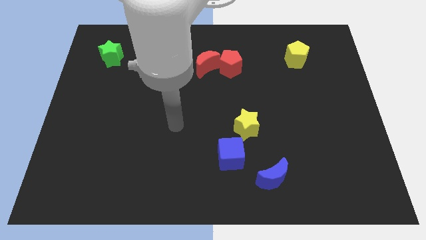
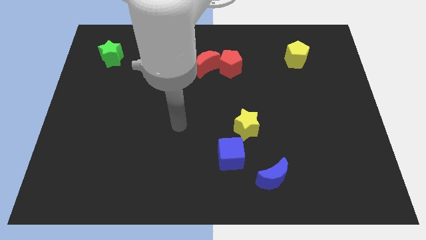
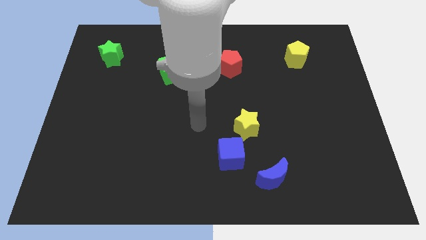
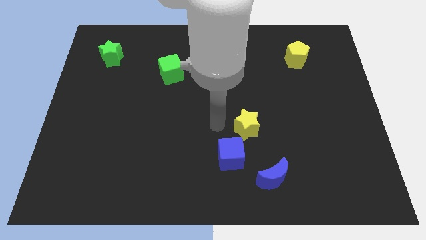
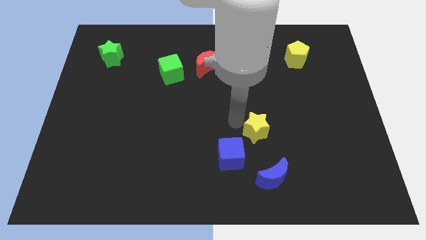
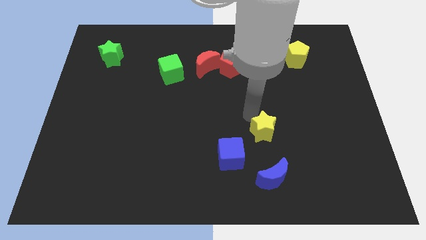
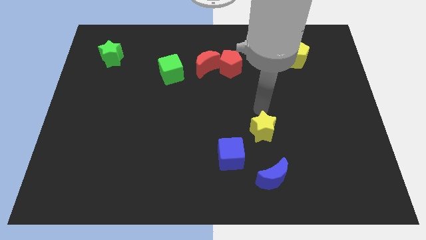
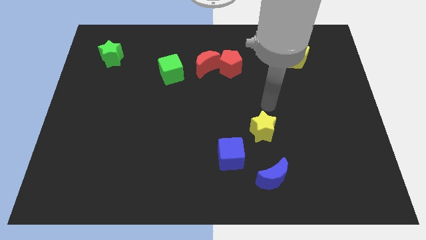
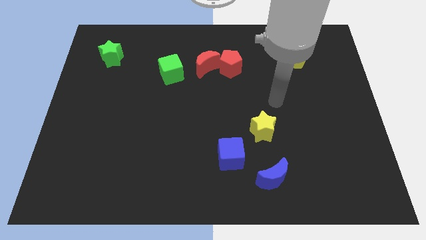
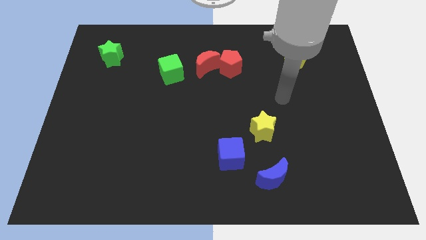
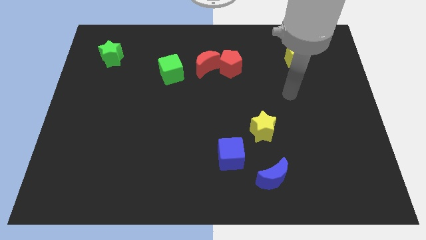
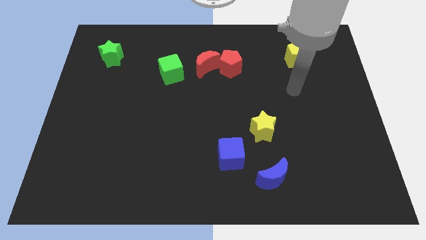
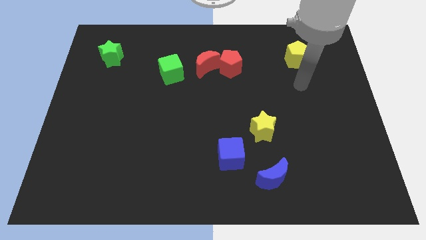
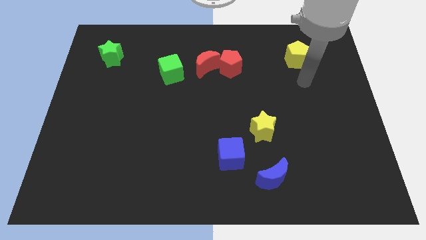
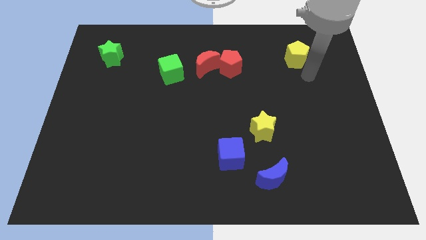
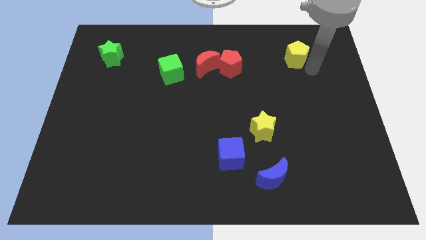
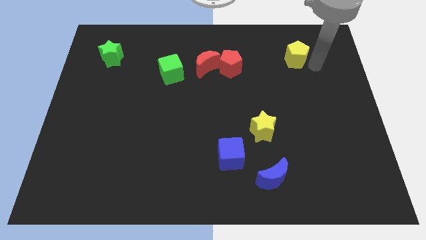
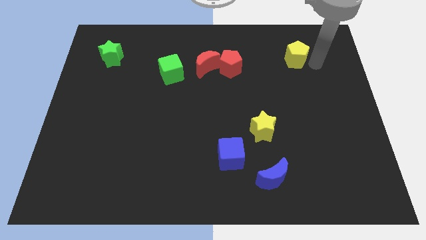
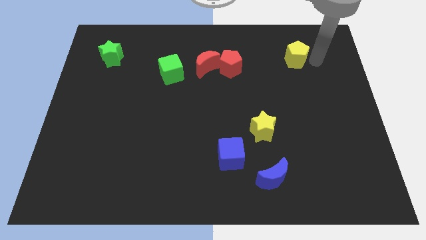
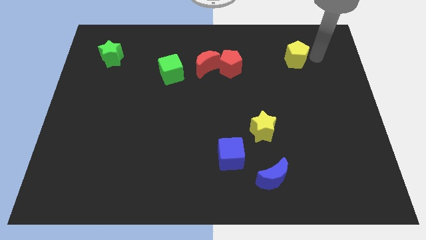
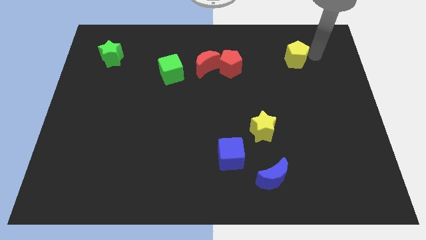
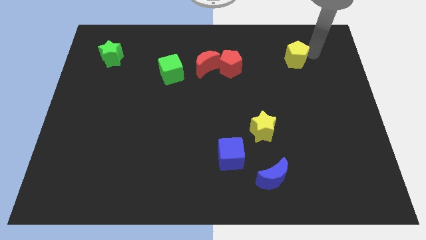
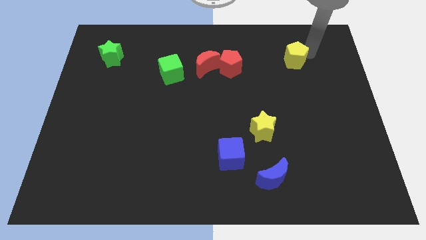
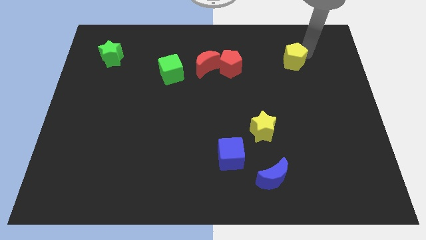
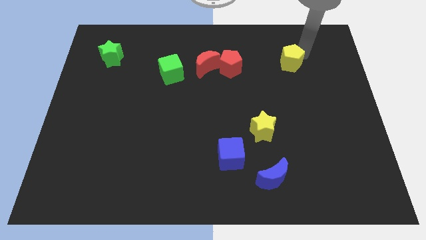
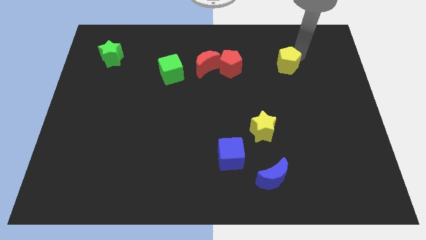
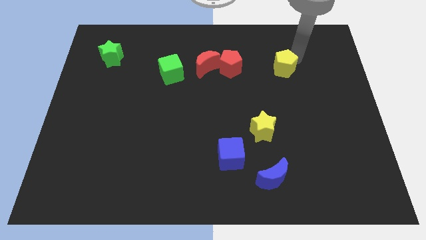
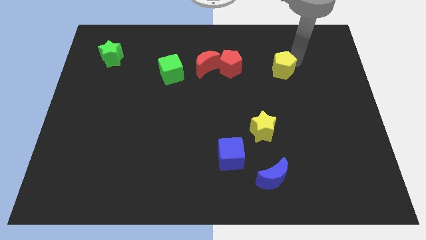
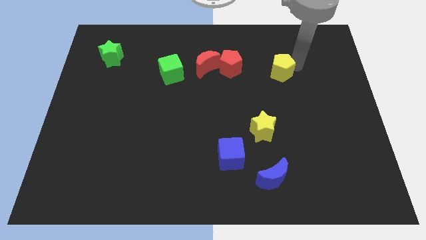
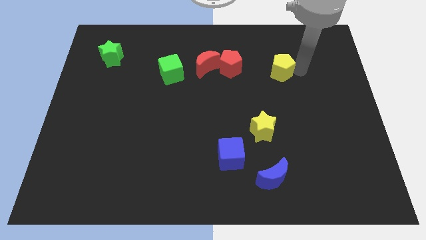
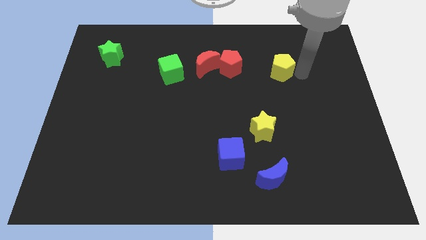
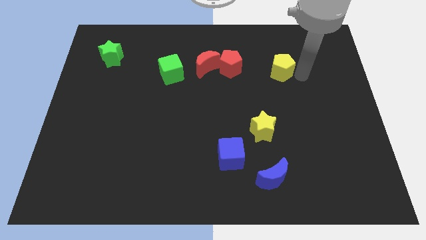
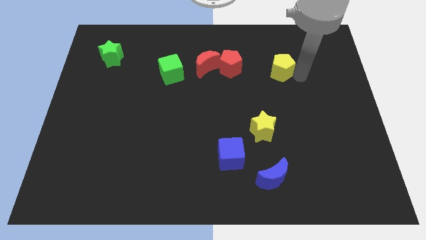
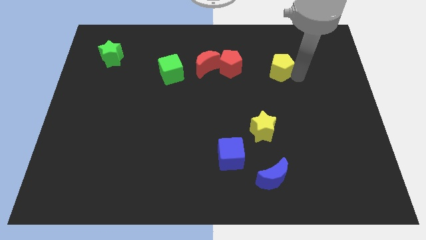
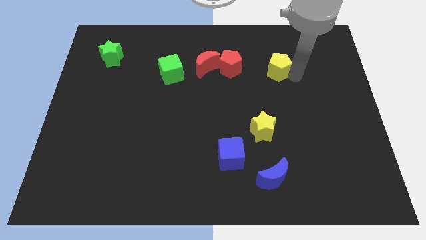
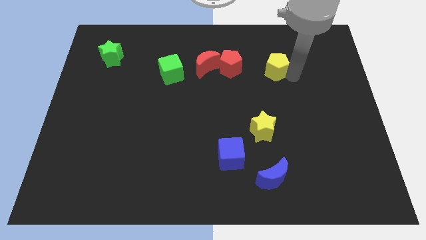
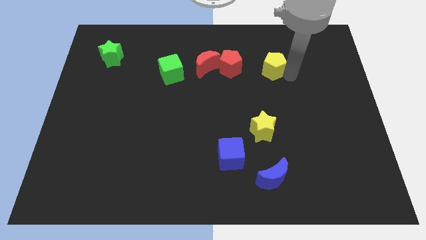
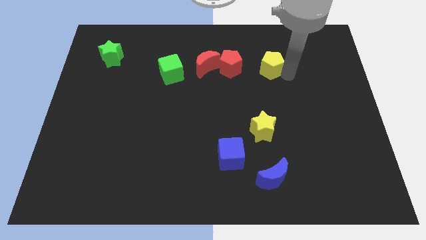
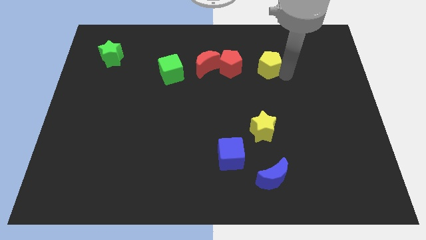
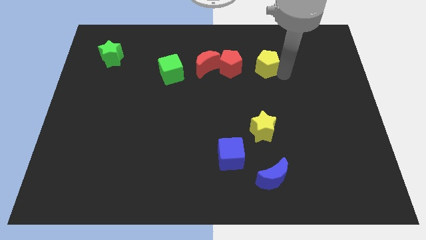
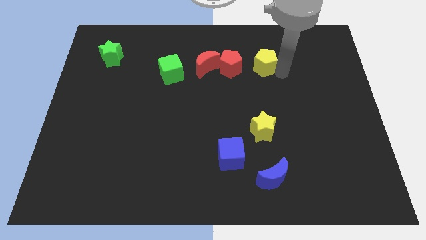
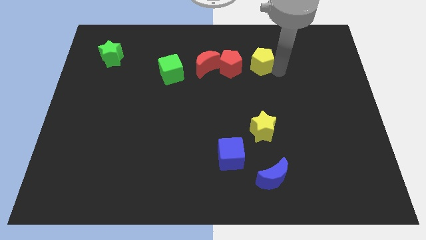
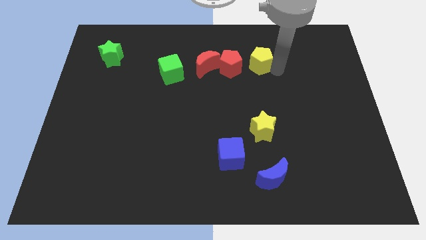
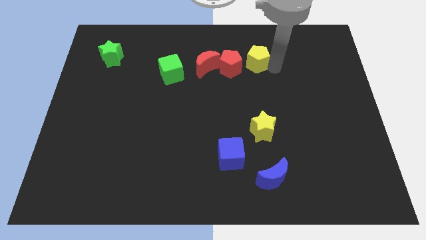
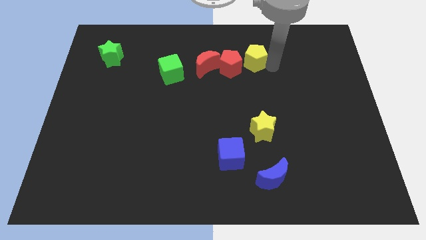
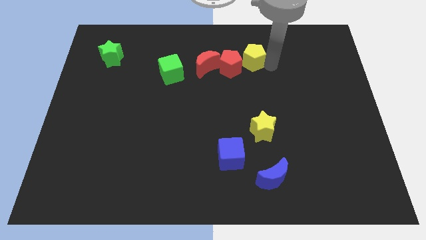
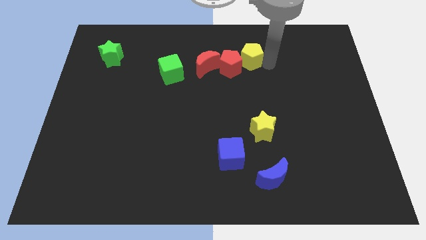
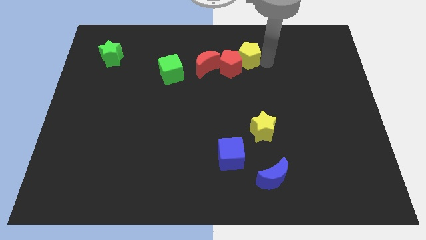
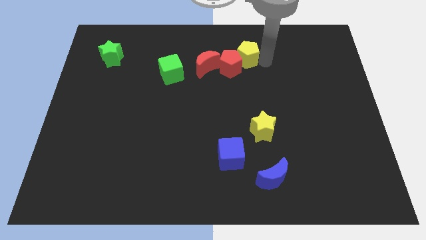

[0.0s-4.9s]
slide the yellow pentagon close to the red pentagon

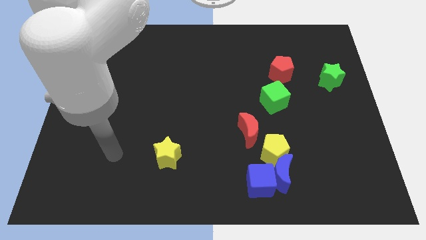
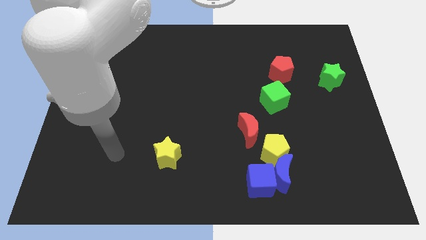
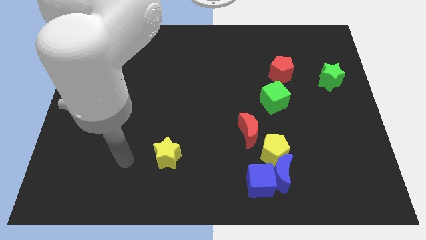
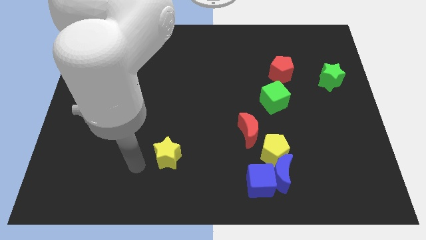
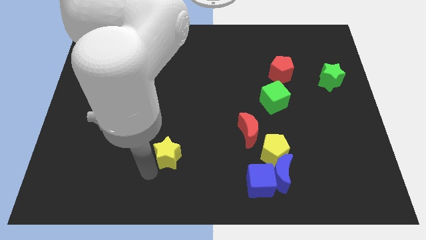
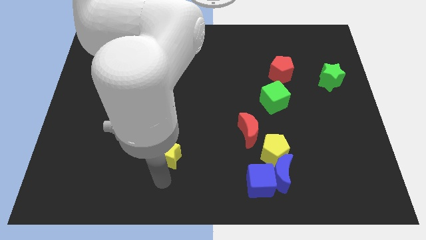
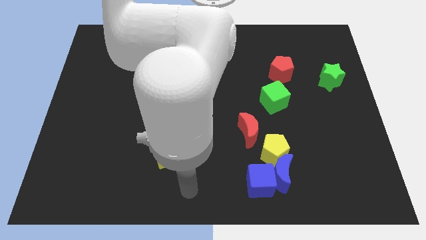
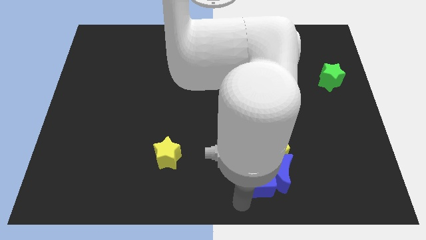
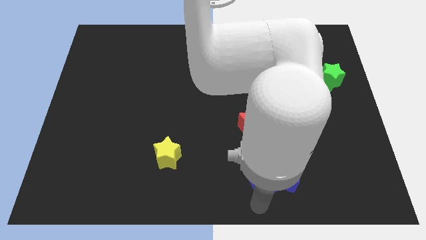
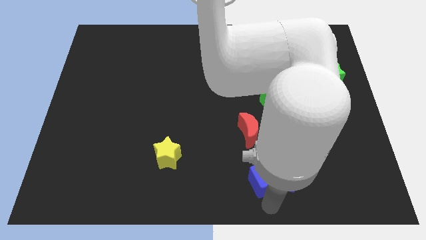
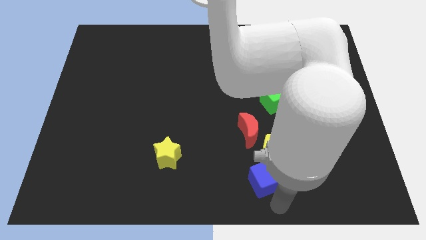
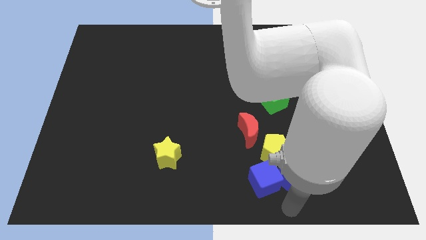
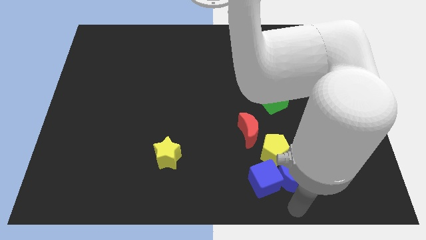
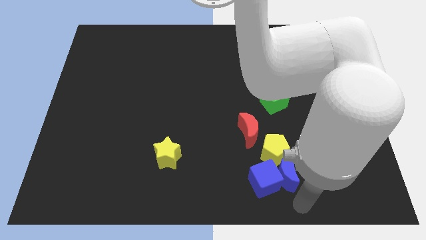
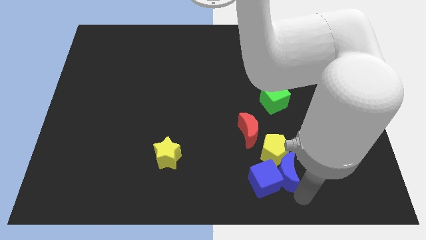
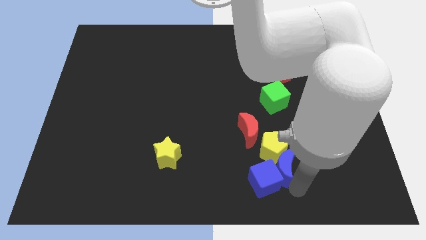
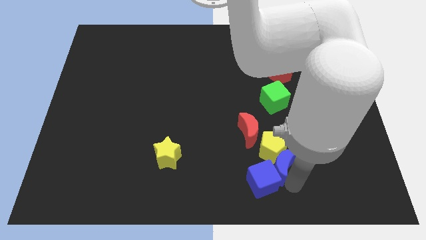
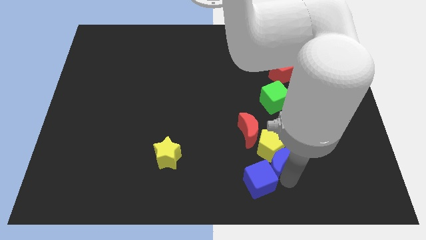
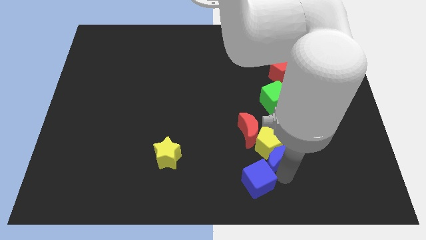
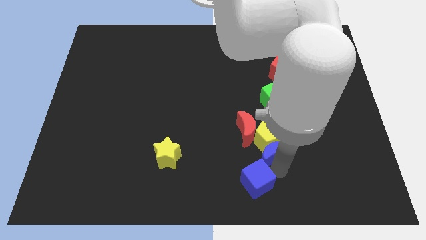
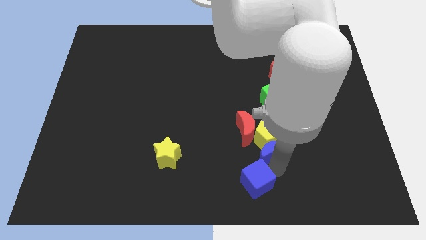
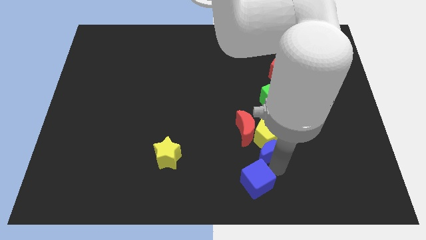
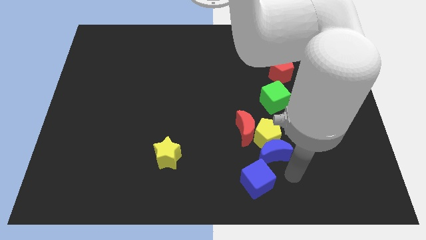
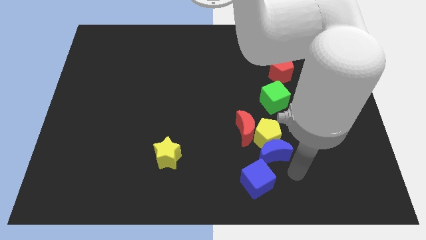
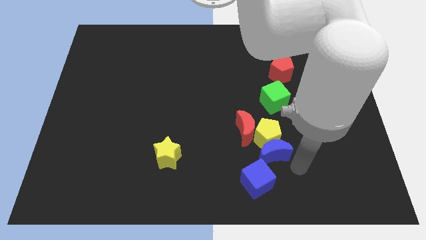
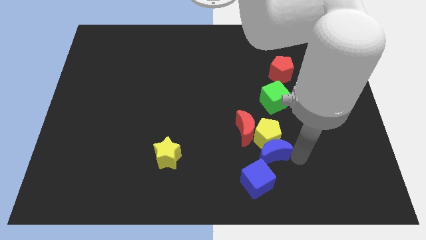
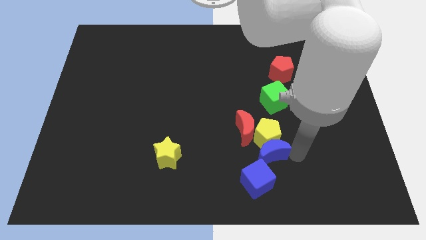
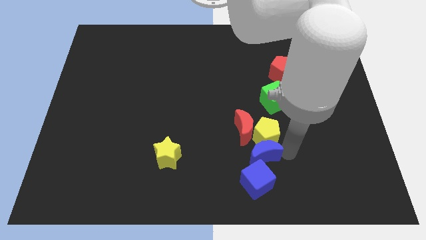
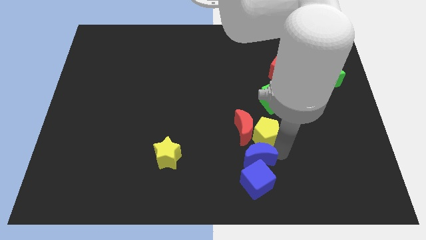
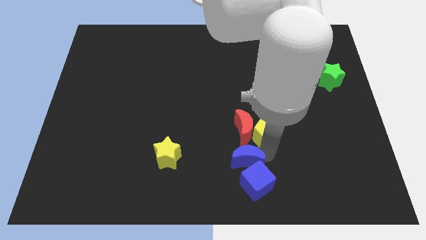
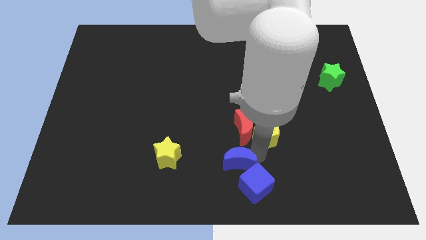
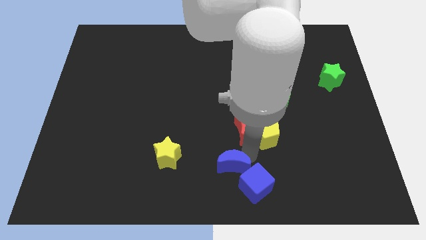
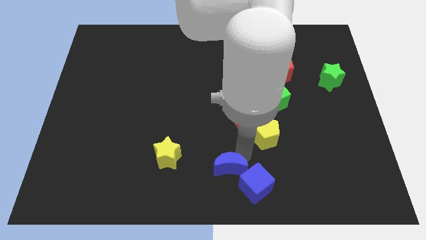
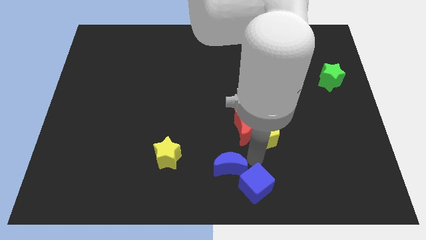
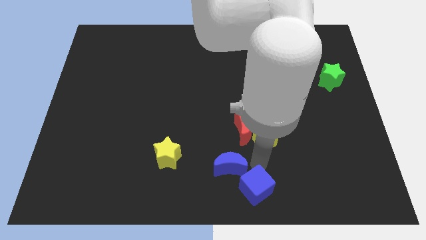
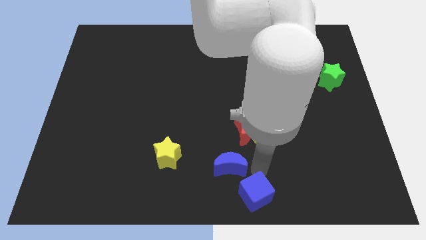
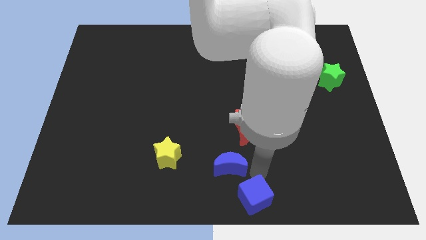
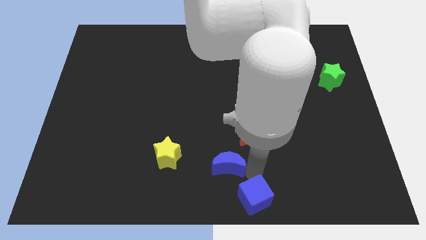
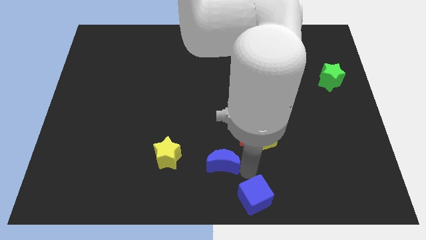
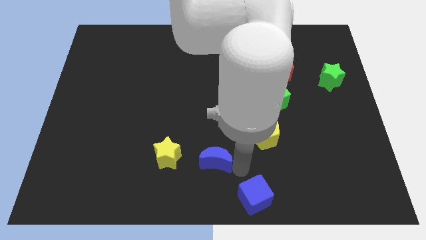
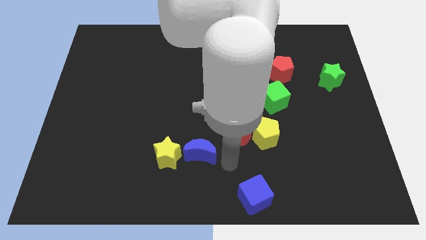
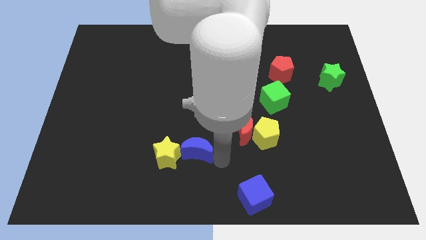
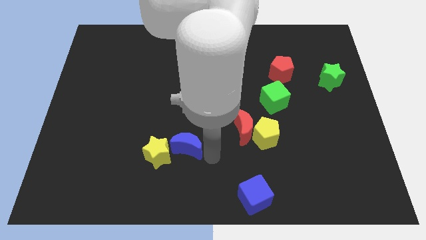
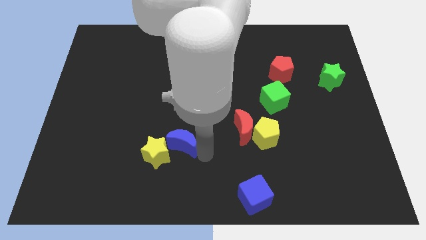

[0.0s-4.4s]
push the blue moon next to the yellow star
